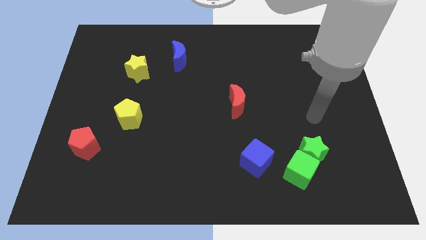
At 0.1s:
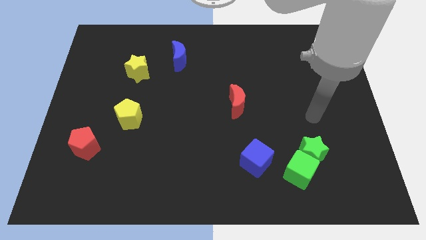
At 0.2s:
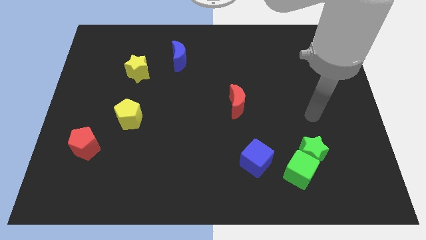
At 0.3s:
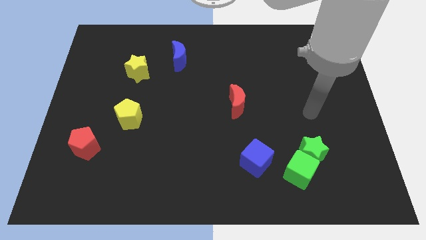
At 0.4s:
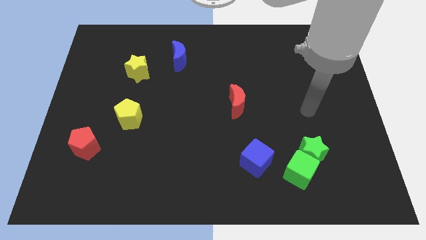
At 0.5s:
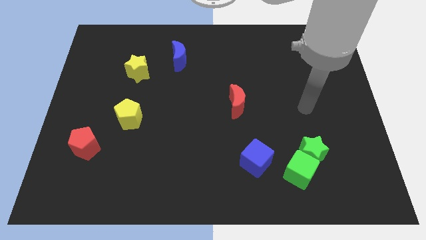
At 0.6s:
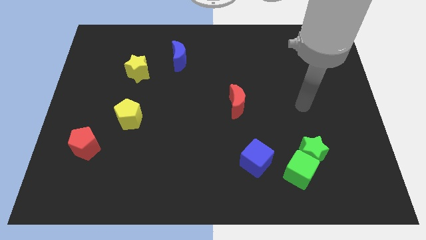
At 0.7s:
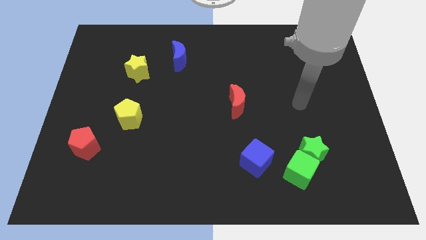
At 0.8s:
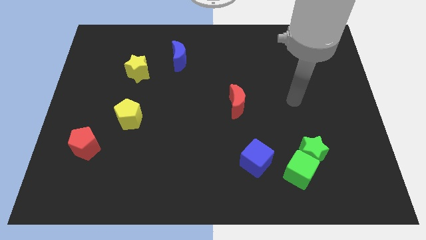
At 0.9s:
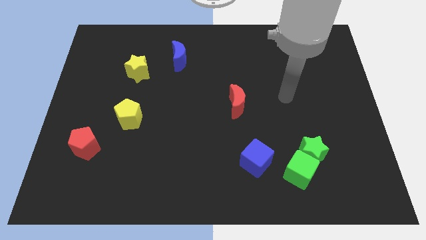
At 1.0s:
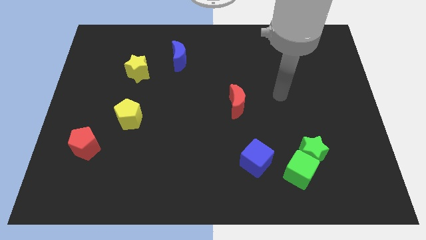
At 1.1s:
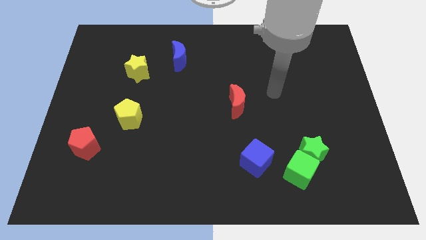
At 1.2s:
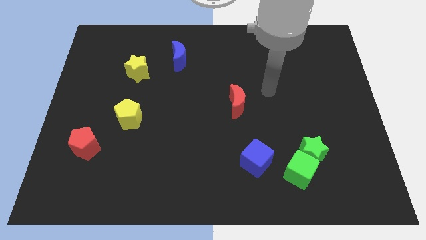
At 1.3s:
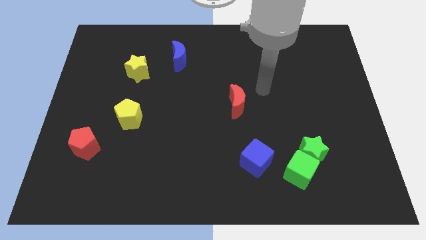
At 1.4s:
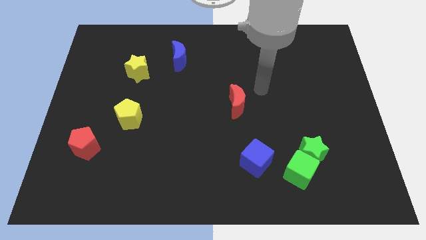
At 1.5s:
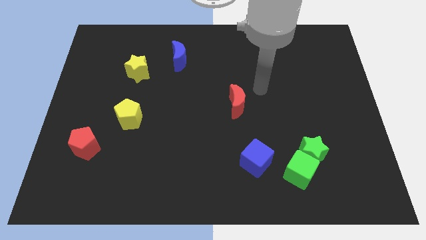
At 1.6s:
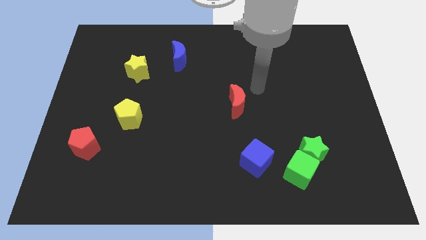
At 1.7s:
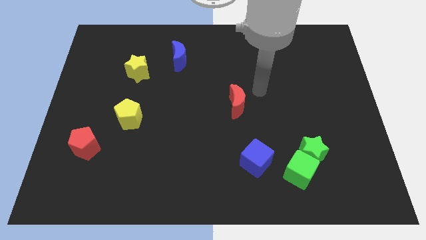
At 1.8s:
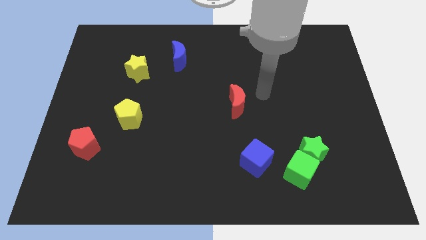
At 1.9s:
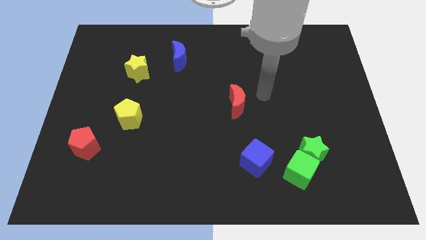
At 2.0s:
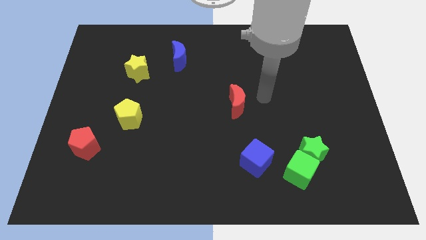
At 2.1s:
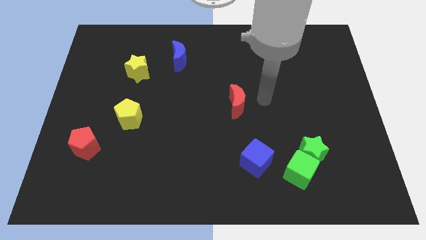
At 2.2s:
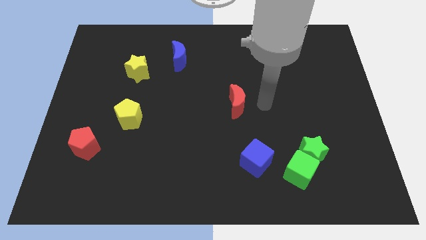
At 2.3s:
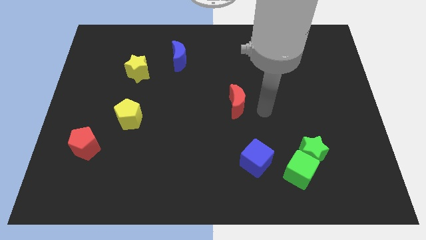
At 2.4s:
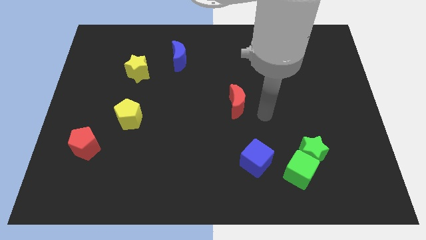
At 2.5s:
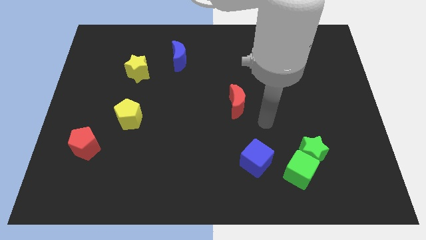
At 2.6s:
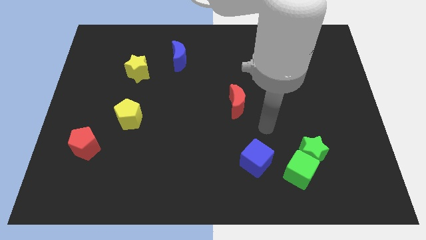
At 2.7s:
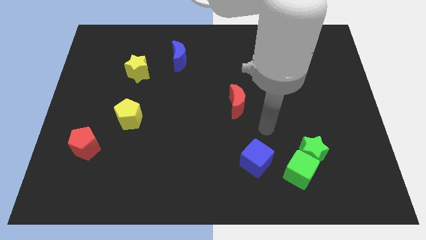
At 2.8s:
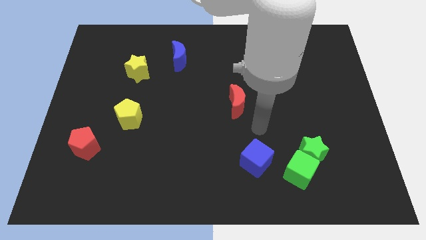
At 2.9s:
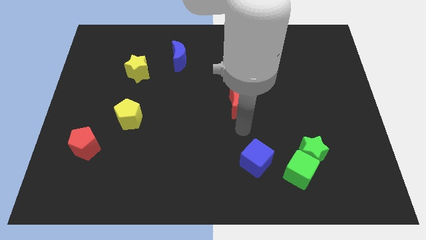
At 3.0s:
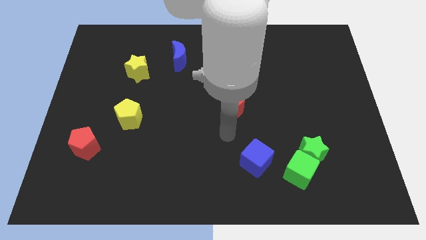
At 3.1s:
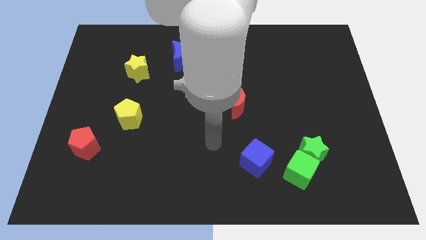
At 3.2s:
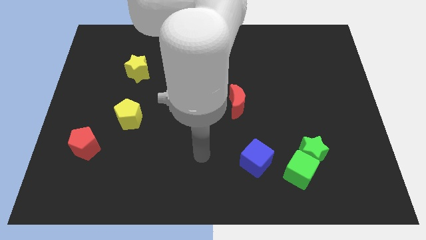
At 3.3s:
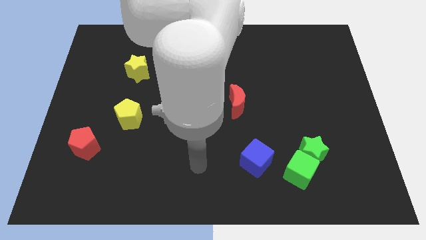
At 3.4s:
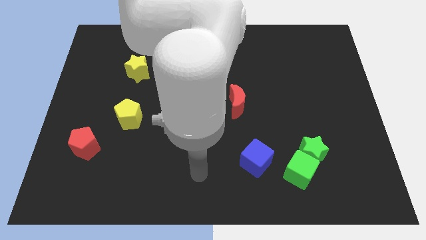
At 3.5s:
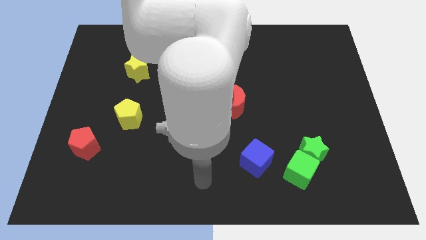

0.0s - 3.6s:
move your arm in between the red moon and blue cube

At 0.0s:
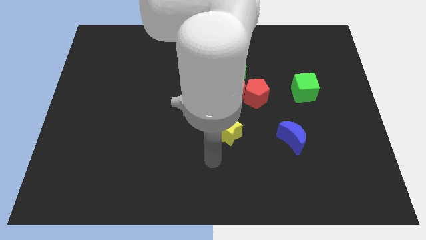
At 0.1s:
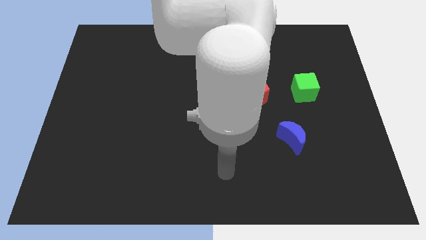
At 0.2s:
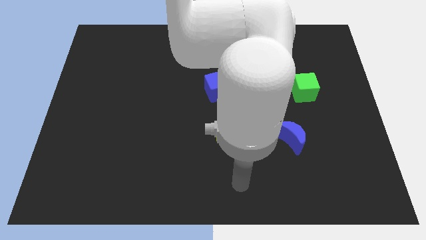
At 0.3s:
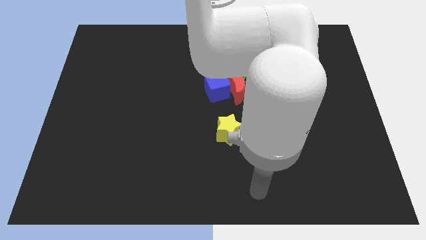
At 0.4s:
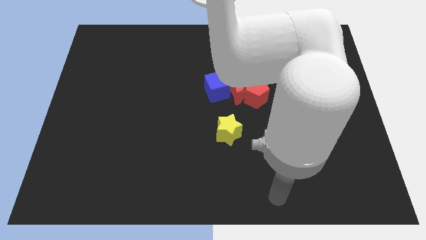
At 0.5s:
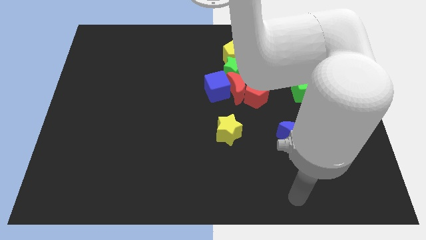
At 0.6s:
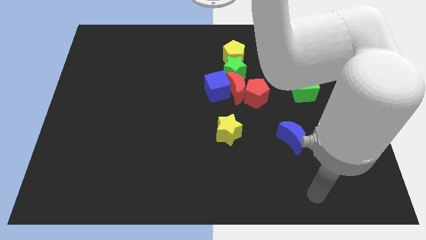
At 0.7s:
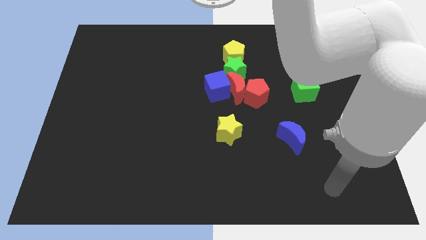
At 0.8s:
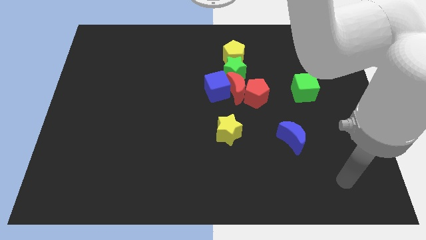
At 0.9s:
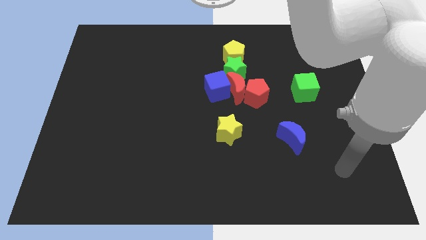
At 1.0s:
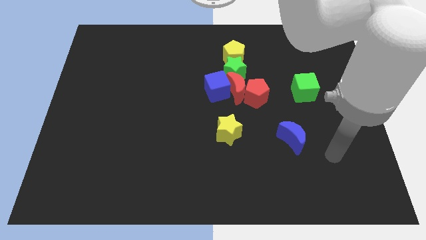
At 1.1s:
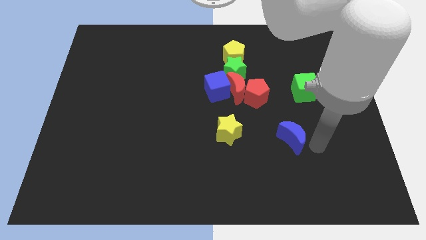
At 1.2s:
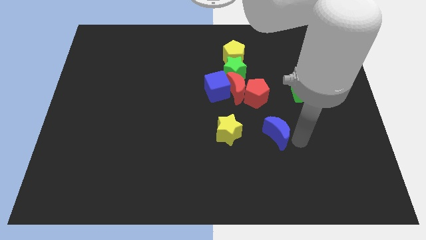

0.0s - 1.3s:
move the arm to the right side of the blue crescent

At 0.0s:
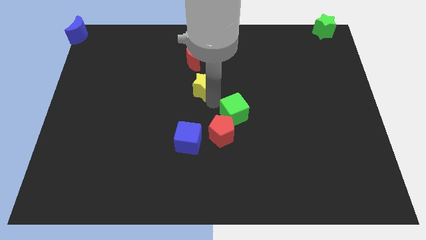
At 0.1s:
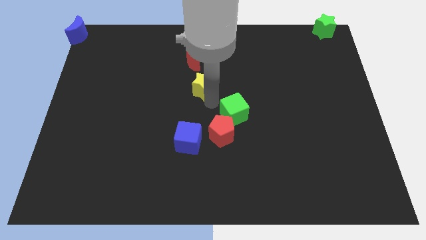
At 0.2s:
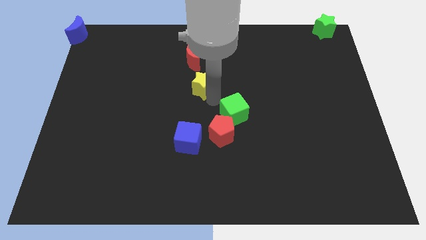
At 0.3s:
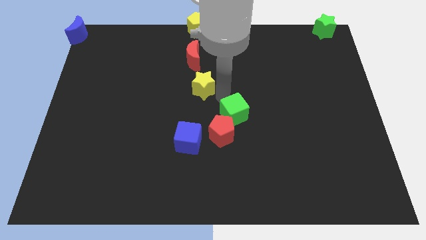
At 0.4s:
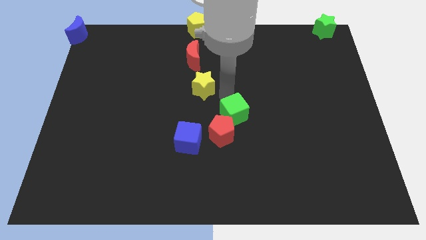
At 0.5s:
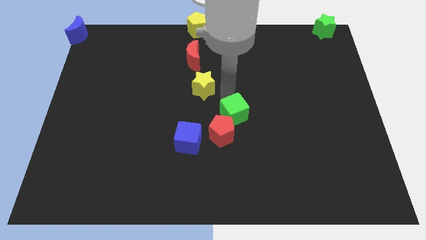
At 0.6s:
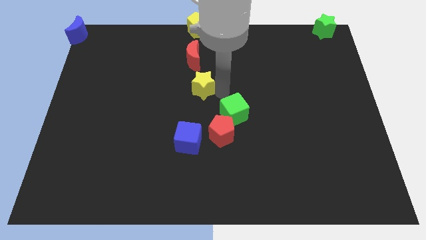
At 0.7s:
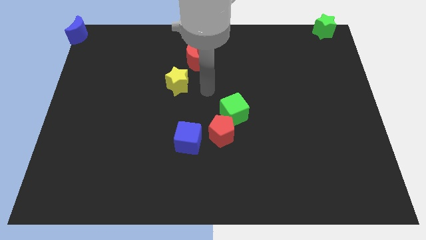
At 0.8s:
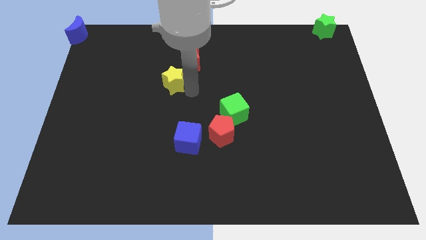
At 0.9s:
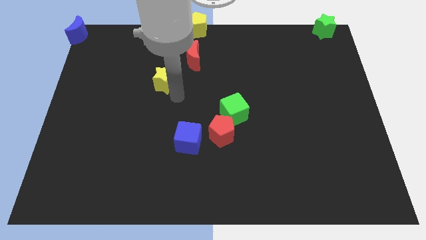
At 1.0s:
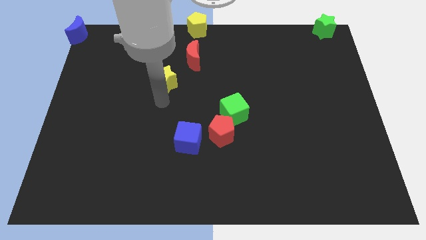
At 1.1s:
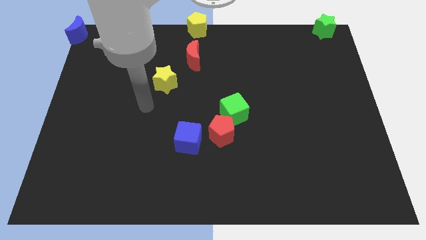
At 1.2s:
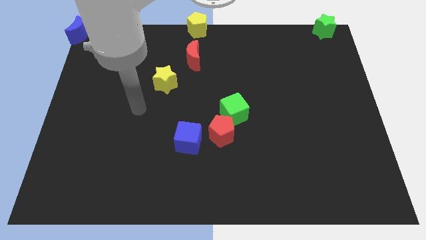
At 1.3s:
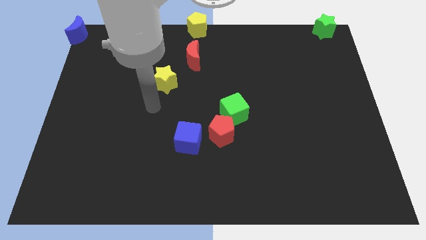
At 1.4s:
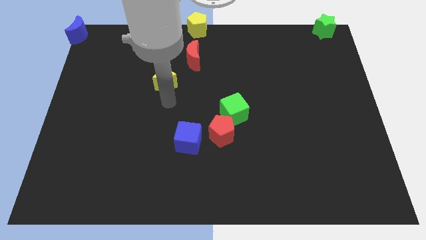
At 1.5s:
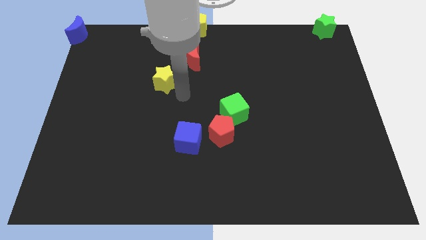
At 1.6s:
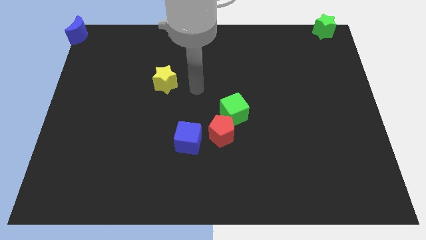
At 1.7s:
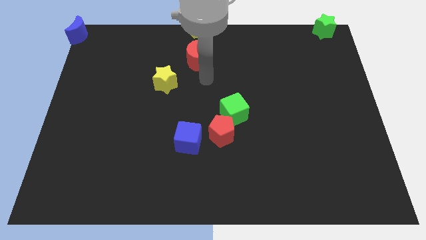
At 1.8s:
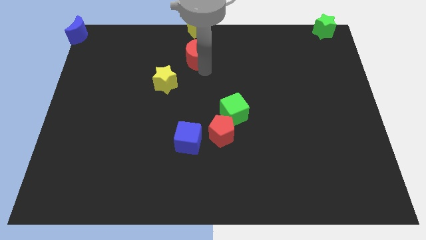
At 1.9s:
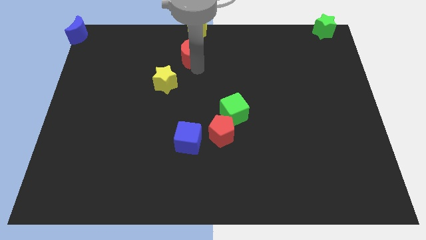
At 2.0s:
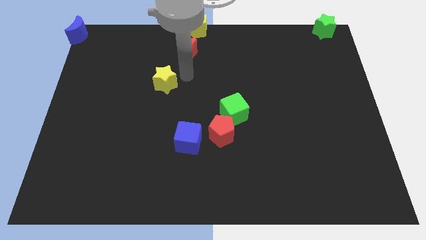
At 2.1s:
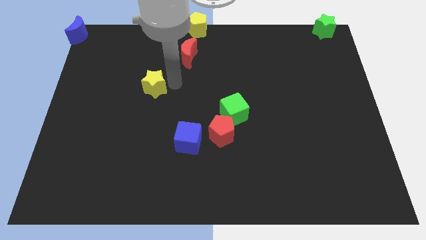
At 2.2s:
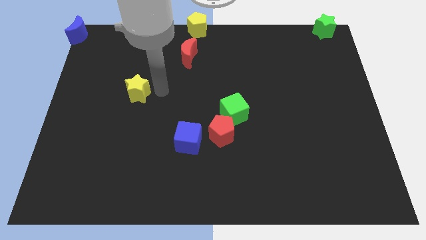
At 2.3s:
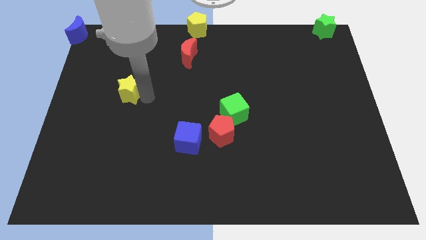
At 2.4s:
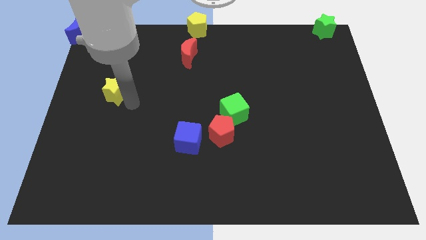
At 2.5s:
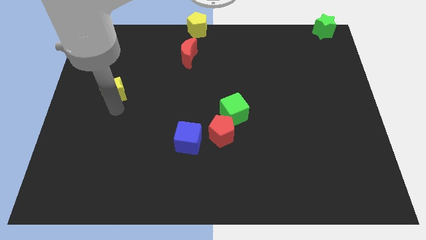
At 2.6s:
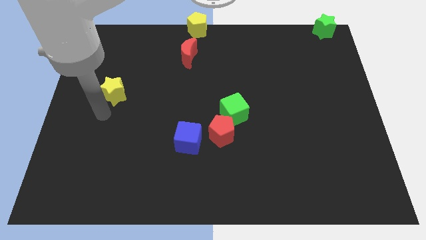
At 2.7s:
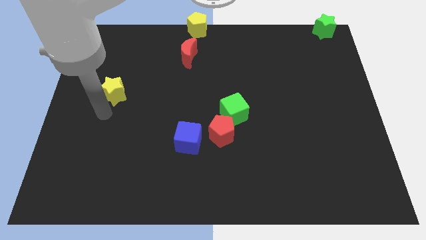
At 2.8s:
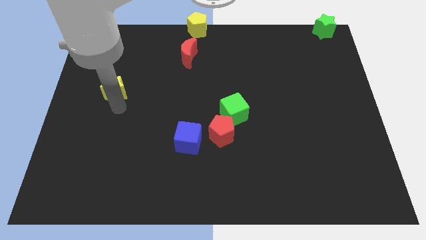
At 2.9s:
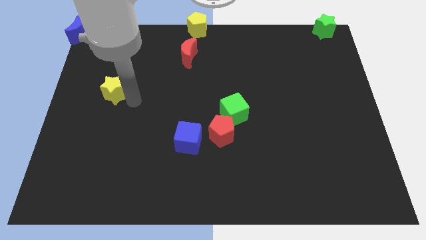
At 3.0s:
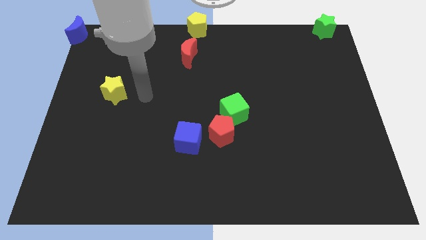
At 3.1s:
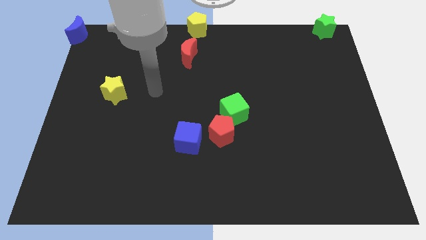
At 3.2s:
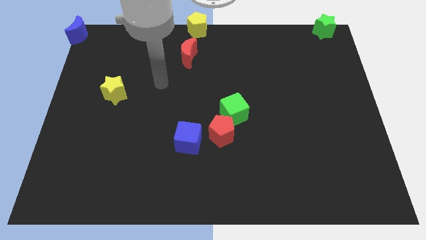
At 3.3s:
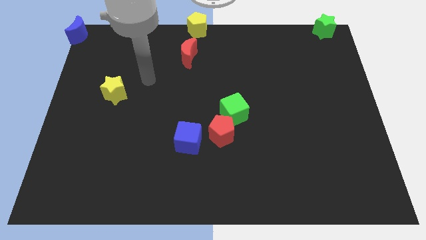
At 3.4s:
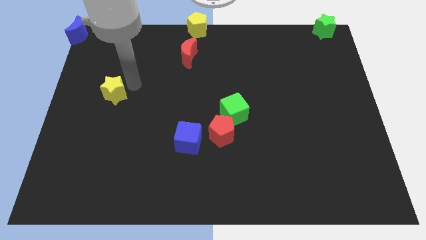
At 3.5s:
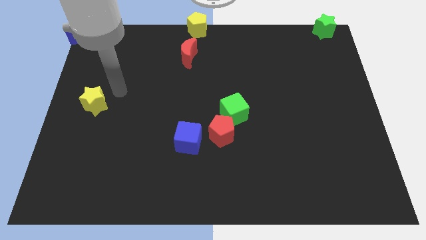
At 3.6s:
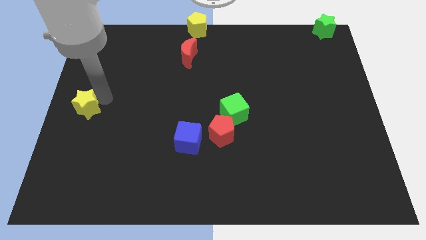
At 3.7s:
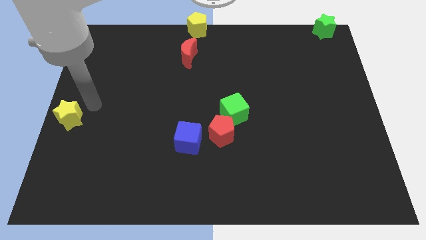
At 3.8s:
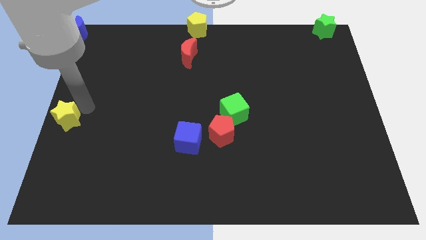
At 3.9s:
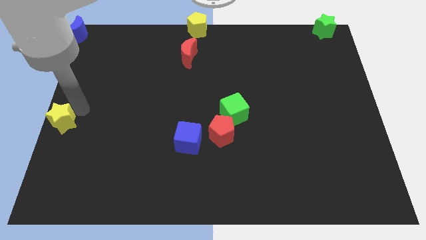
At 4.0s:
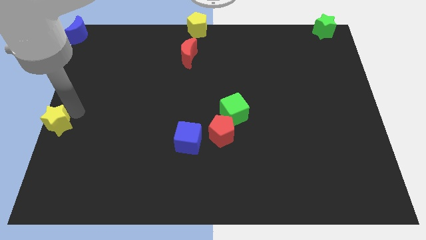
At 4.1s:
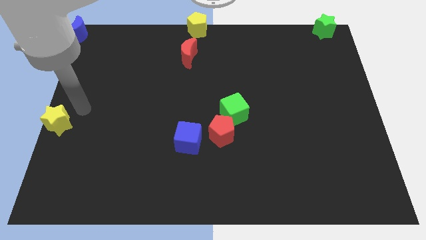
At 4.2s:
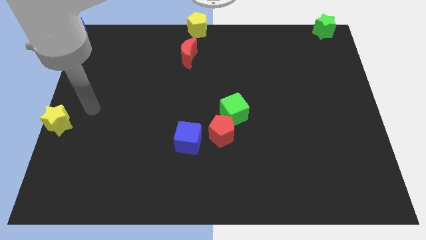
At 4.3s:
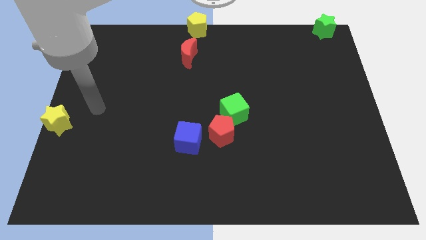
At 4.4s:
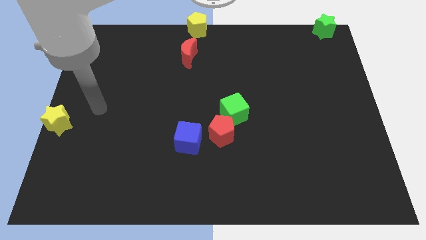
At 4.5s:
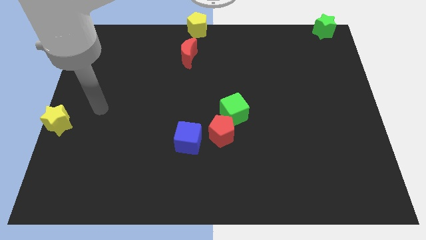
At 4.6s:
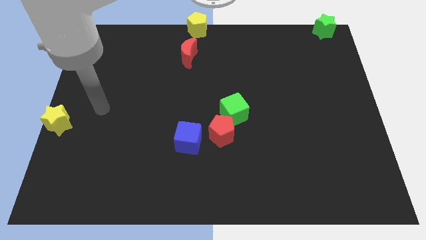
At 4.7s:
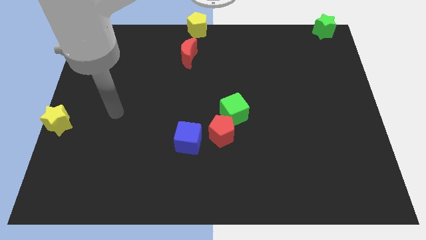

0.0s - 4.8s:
push the yellow star to the center left
